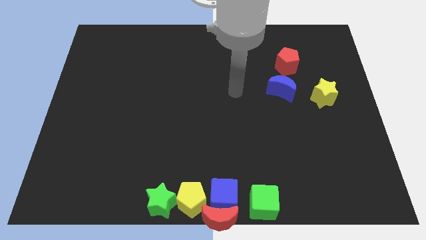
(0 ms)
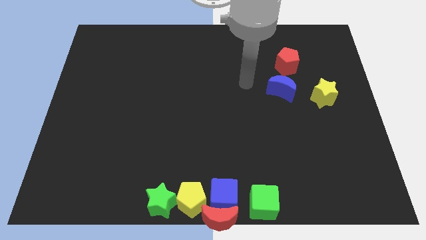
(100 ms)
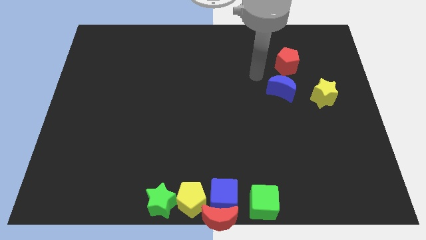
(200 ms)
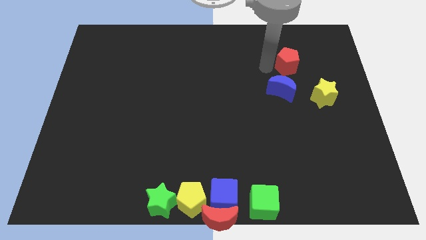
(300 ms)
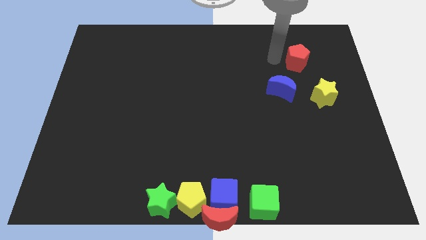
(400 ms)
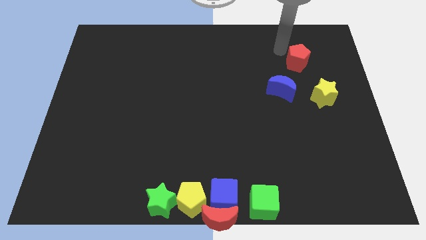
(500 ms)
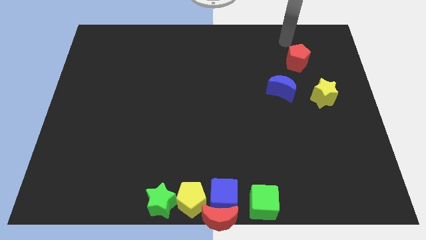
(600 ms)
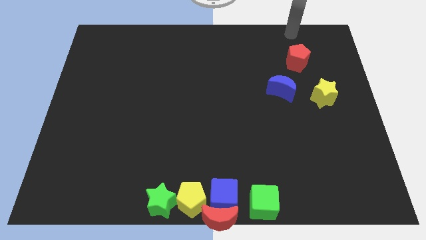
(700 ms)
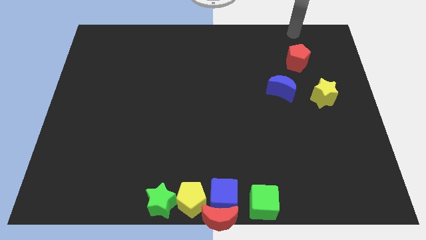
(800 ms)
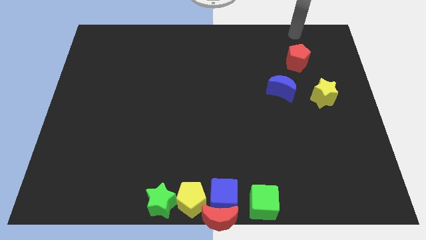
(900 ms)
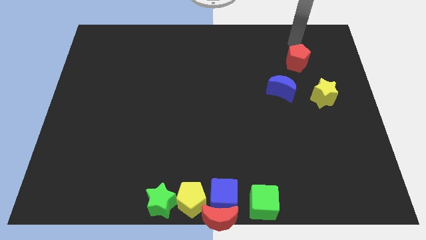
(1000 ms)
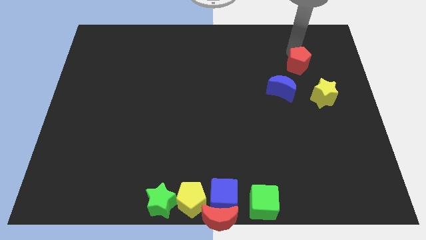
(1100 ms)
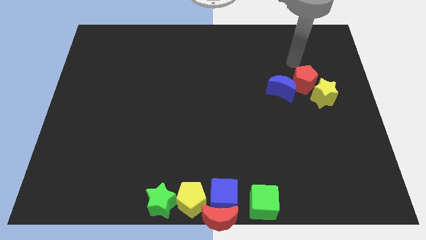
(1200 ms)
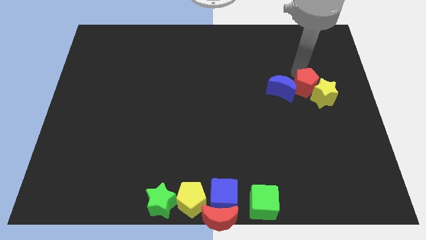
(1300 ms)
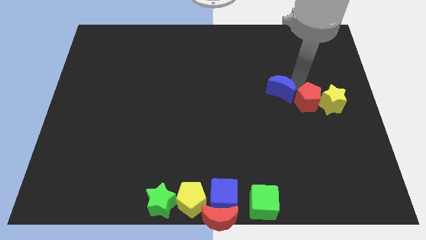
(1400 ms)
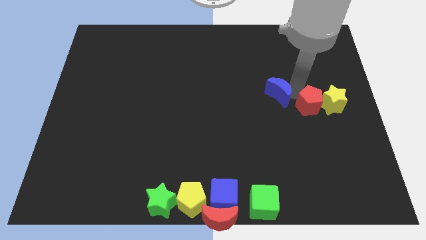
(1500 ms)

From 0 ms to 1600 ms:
move the red pentagon in between the yellow star and blue crescent

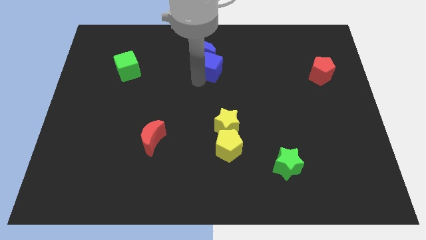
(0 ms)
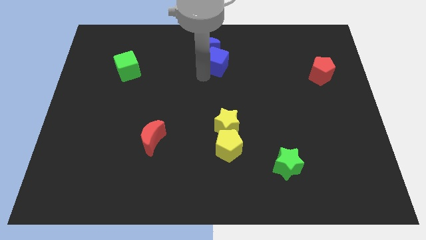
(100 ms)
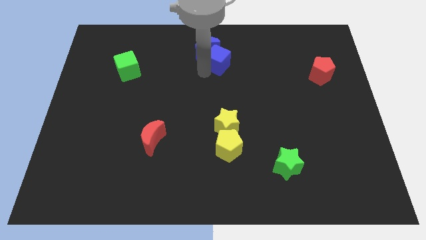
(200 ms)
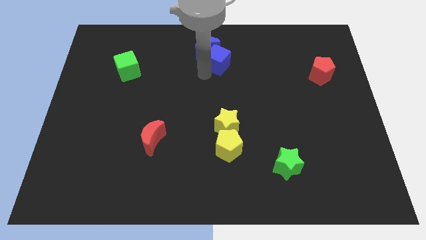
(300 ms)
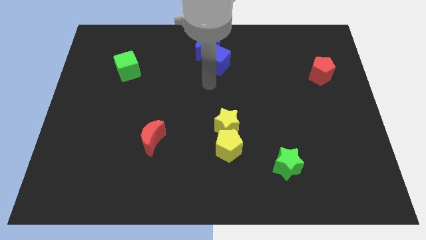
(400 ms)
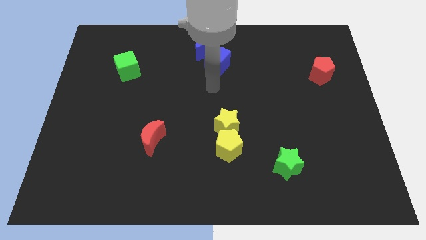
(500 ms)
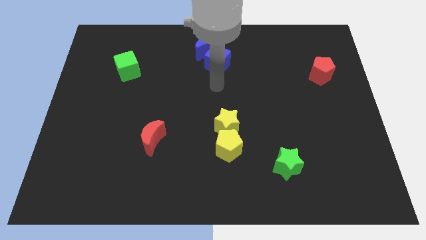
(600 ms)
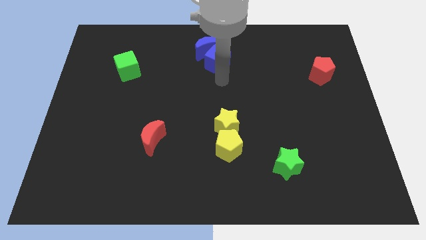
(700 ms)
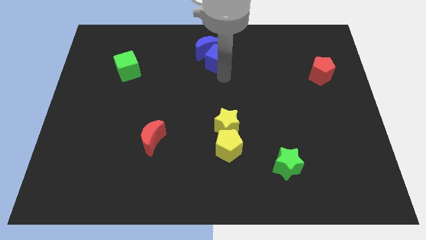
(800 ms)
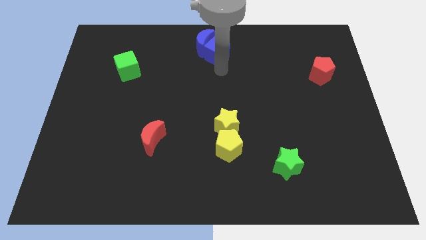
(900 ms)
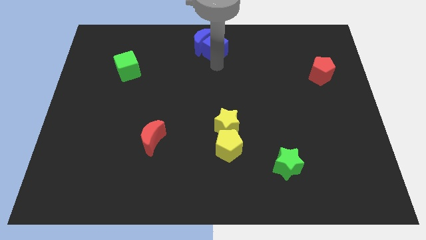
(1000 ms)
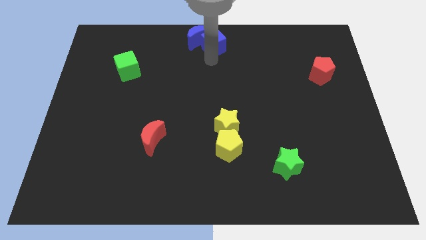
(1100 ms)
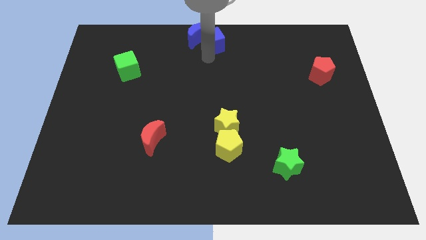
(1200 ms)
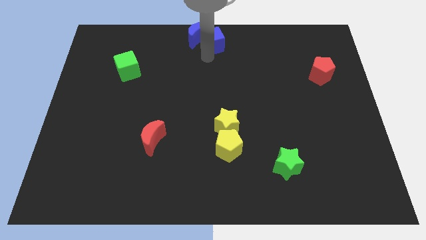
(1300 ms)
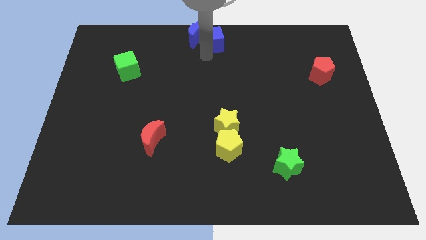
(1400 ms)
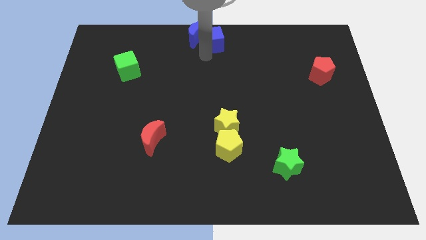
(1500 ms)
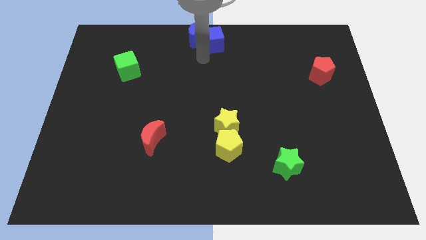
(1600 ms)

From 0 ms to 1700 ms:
push blue crescent and blue cube to the top center of the board

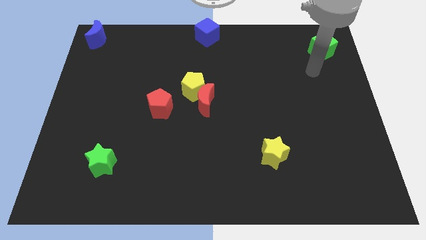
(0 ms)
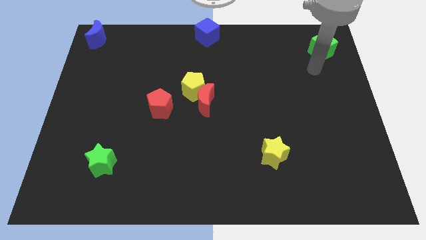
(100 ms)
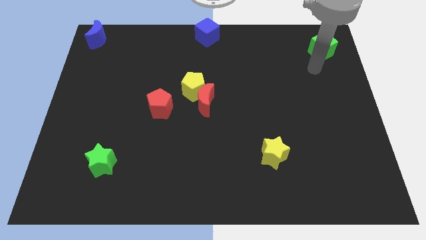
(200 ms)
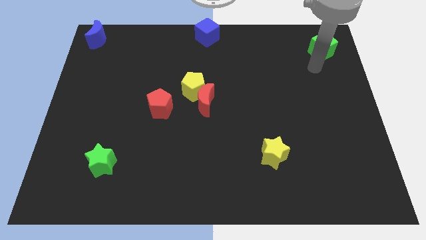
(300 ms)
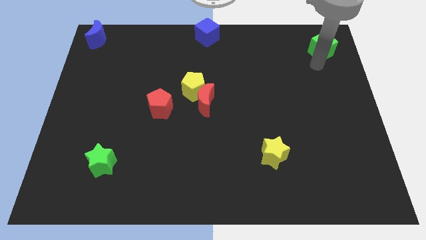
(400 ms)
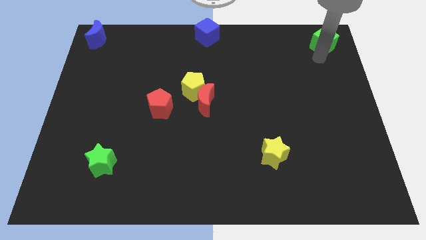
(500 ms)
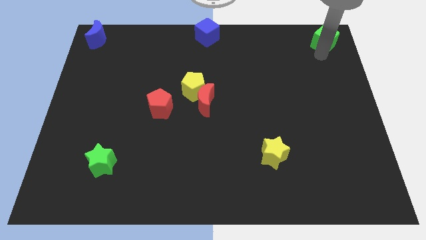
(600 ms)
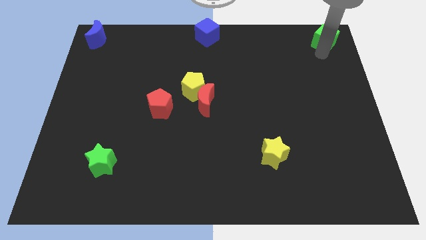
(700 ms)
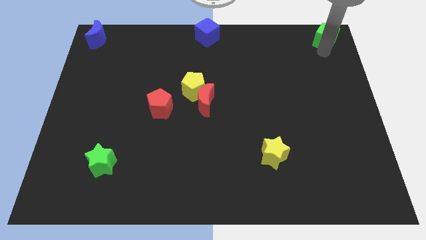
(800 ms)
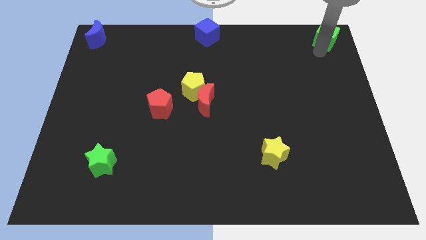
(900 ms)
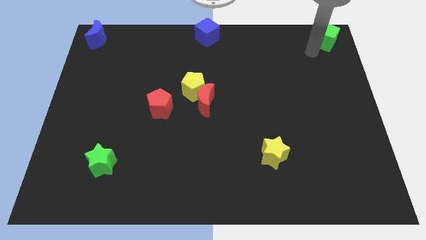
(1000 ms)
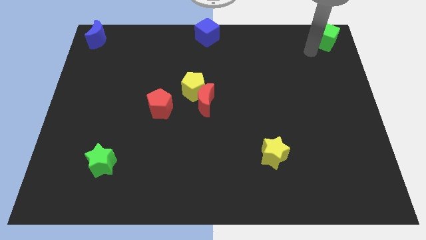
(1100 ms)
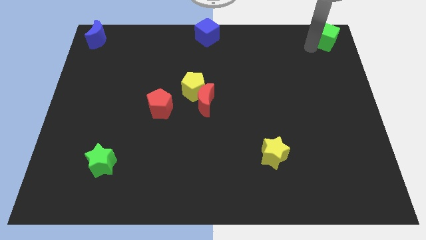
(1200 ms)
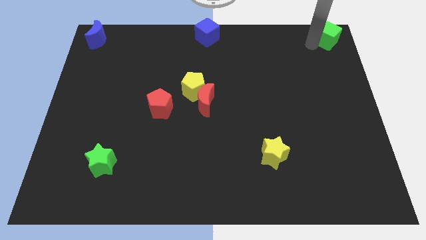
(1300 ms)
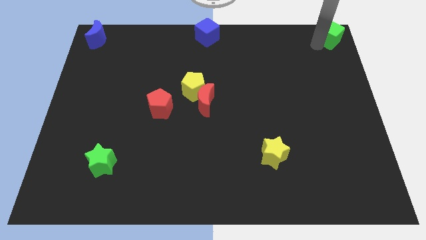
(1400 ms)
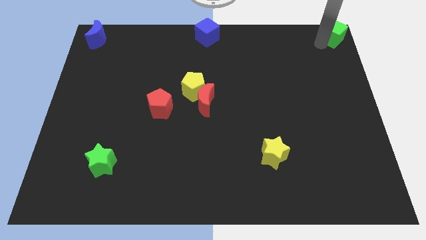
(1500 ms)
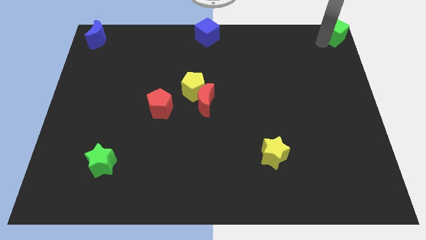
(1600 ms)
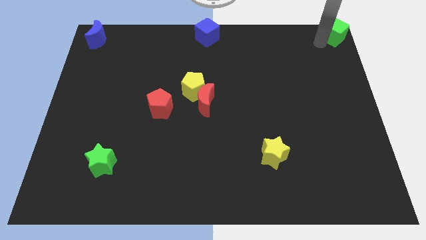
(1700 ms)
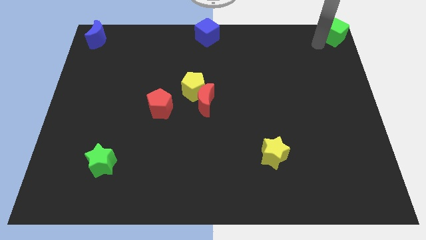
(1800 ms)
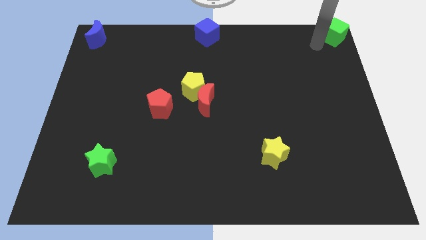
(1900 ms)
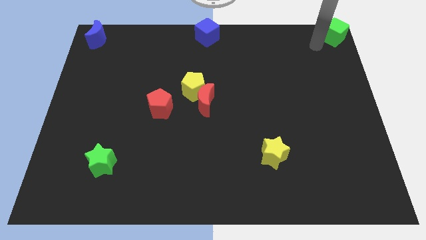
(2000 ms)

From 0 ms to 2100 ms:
slide green cube to the top right of the board

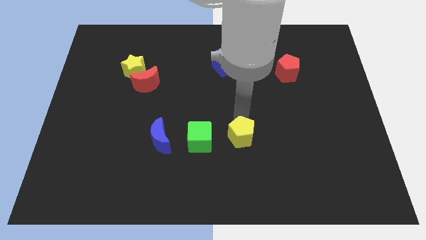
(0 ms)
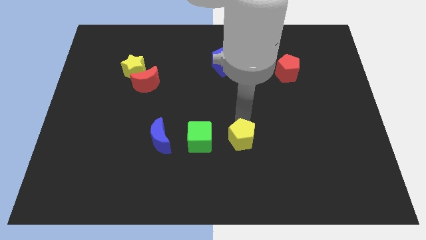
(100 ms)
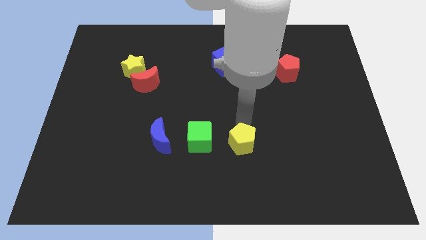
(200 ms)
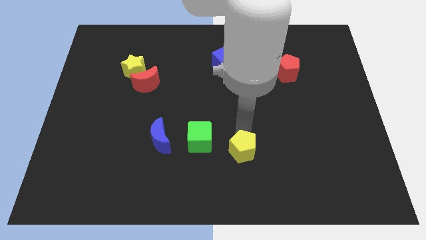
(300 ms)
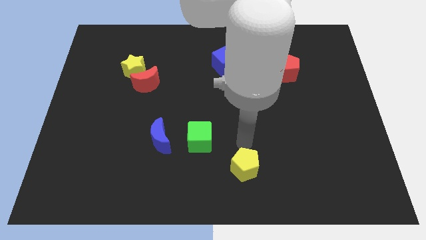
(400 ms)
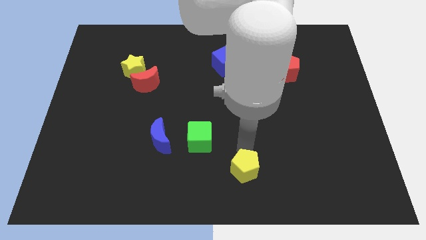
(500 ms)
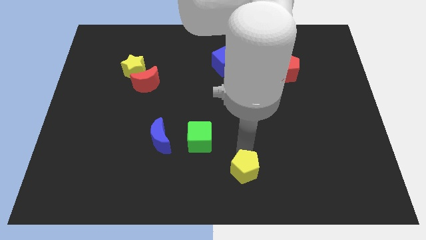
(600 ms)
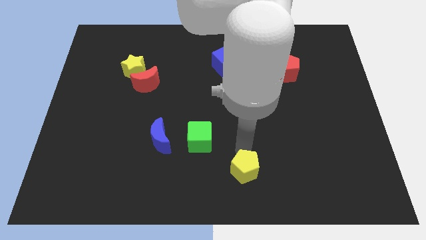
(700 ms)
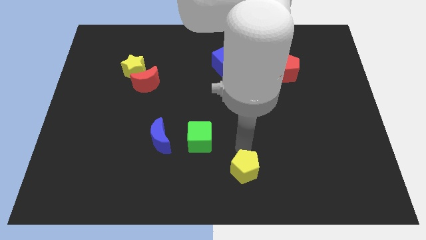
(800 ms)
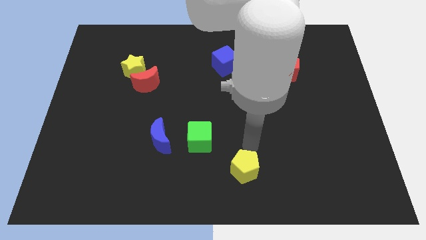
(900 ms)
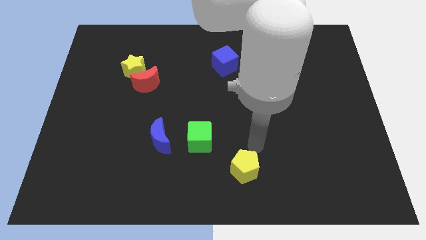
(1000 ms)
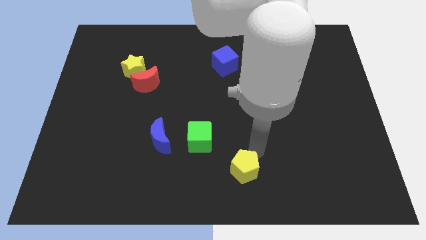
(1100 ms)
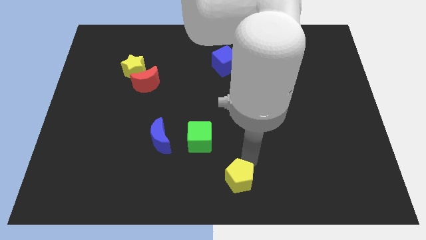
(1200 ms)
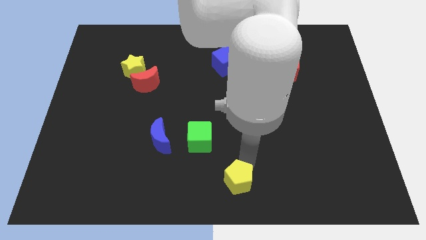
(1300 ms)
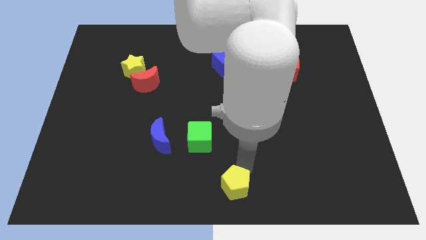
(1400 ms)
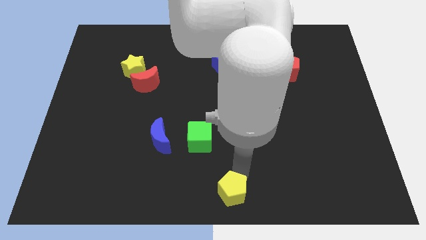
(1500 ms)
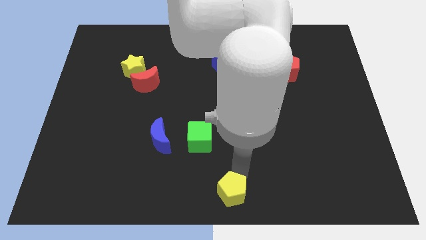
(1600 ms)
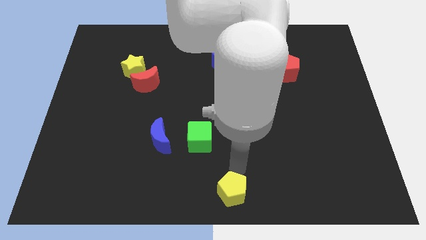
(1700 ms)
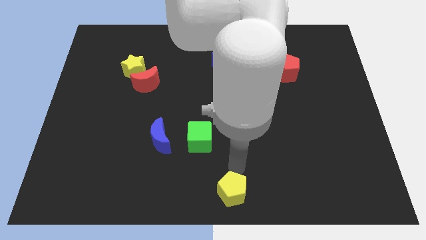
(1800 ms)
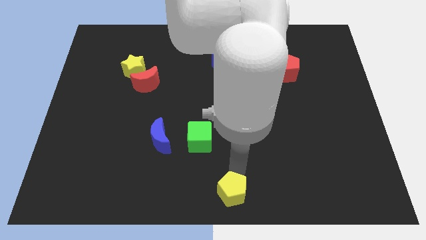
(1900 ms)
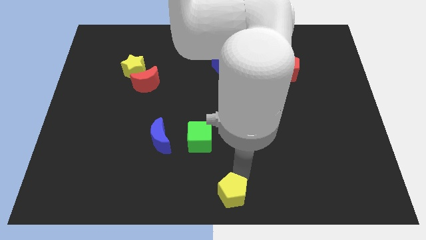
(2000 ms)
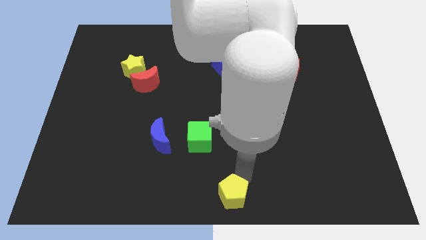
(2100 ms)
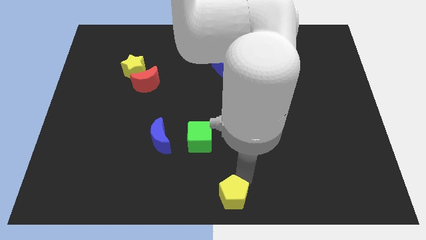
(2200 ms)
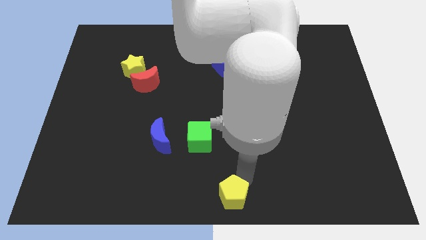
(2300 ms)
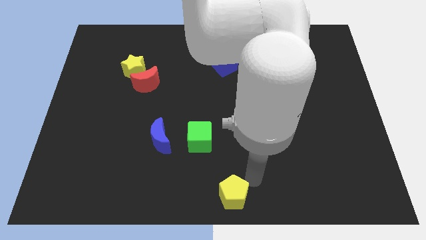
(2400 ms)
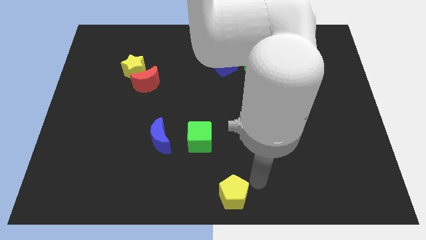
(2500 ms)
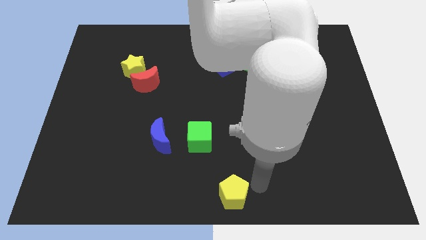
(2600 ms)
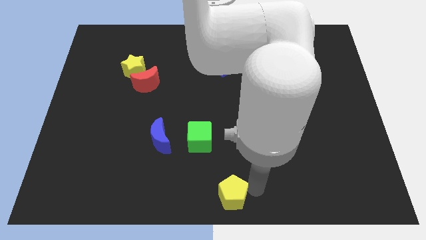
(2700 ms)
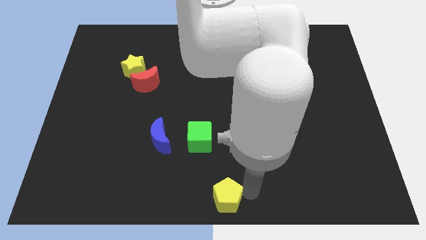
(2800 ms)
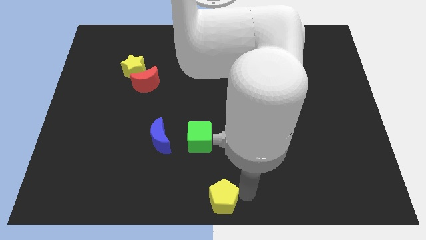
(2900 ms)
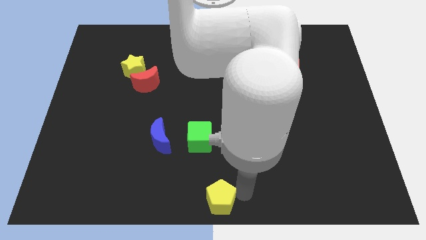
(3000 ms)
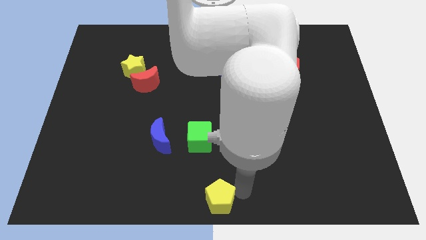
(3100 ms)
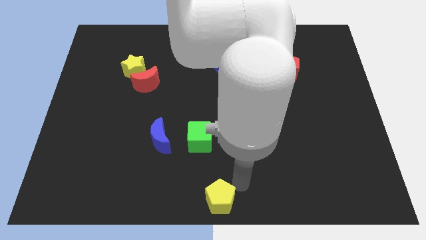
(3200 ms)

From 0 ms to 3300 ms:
place the yellow pentagon at the bottom center of the board

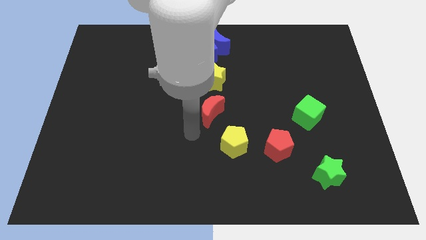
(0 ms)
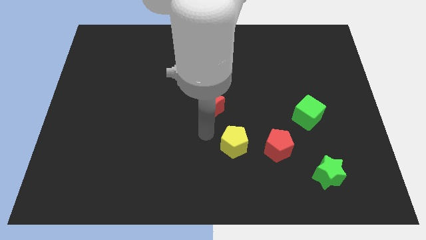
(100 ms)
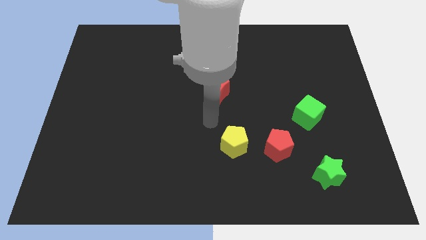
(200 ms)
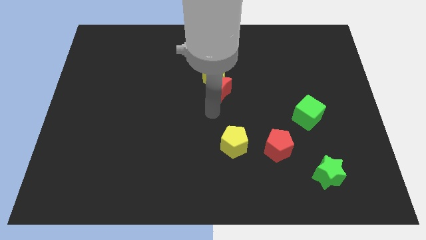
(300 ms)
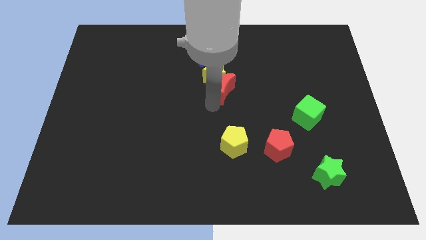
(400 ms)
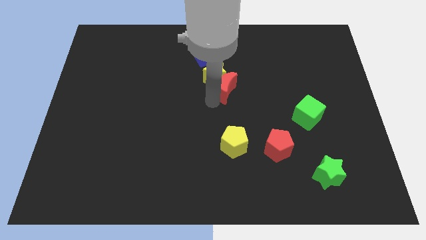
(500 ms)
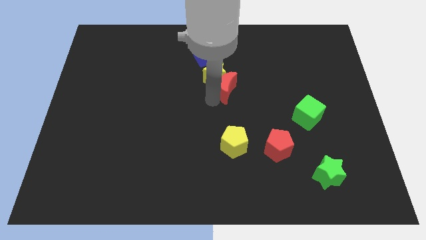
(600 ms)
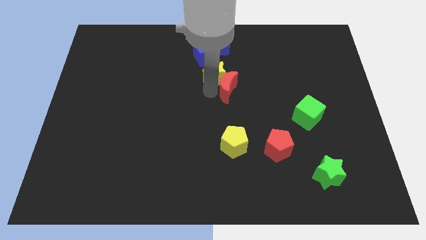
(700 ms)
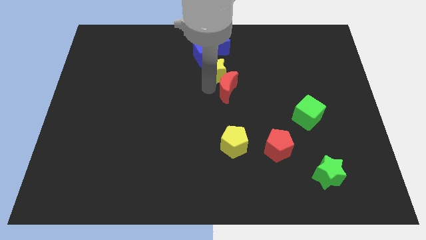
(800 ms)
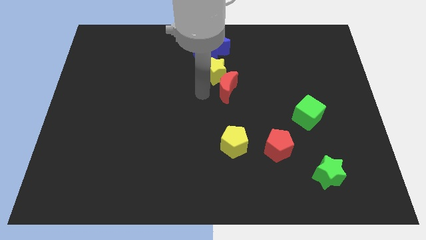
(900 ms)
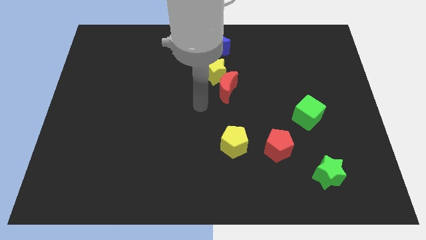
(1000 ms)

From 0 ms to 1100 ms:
move the red crescent to the bottom of the yellow star
